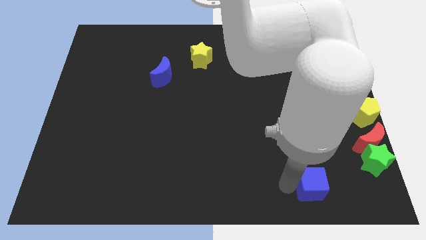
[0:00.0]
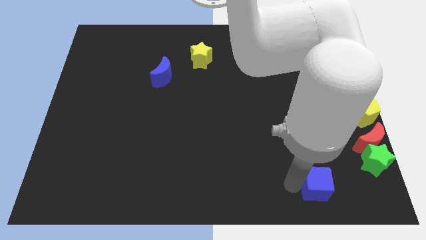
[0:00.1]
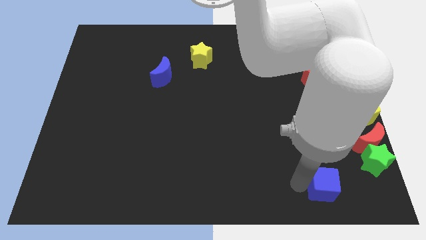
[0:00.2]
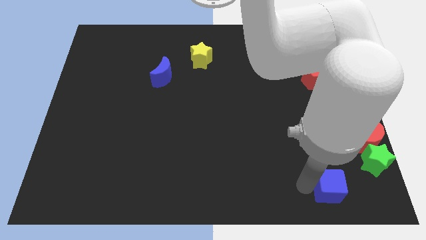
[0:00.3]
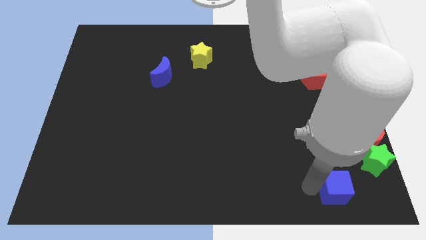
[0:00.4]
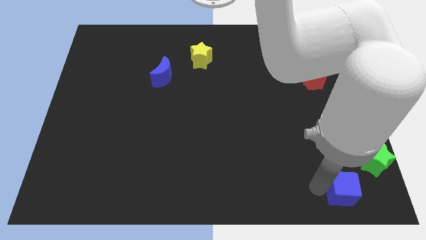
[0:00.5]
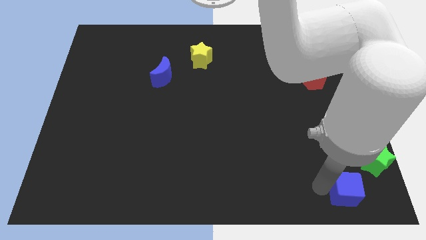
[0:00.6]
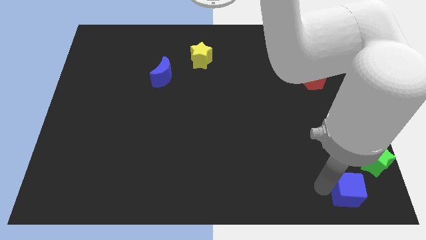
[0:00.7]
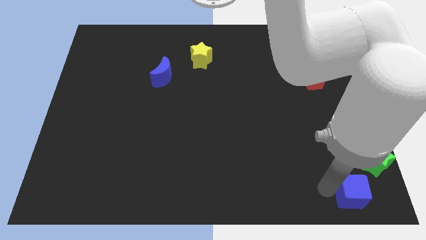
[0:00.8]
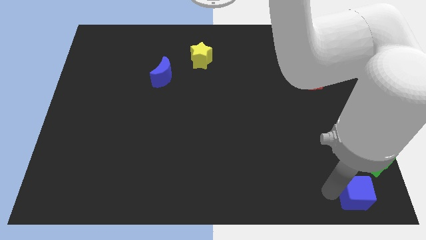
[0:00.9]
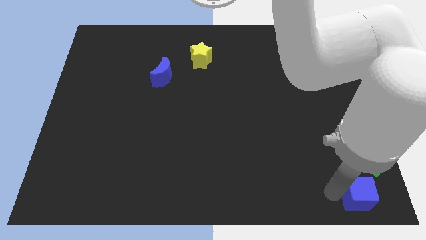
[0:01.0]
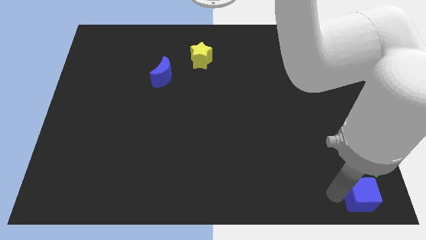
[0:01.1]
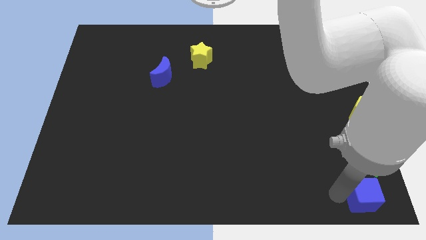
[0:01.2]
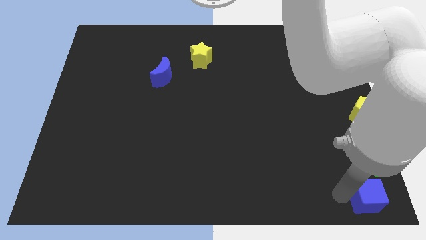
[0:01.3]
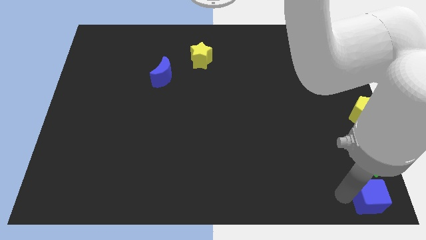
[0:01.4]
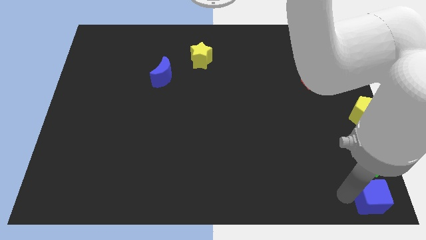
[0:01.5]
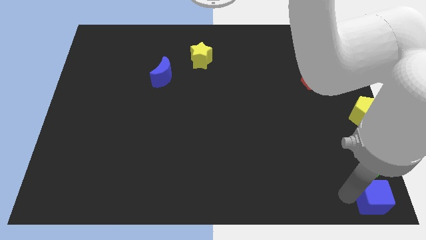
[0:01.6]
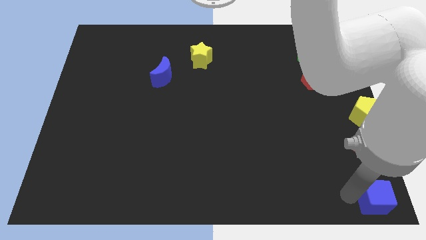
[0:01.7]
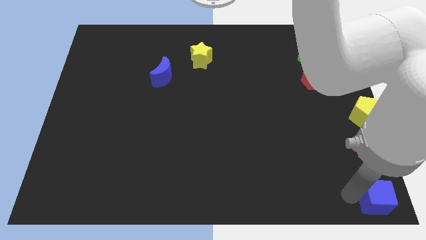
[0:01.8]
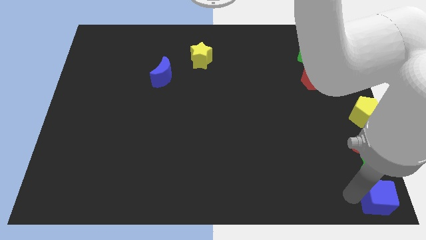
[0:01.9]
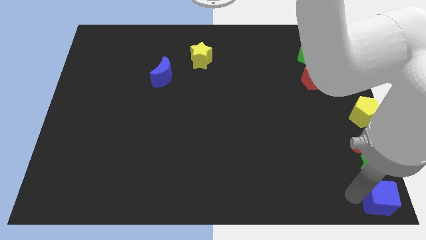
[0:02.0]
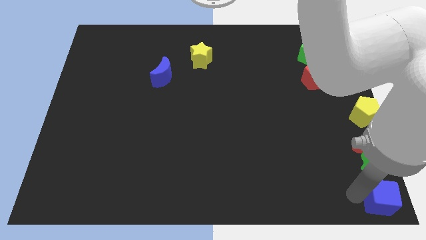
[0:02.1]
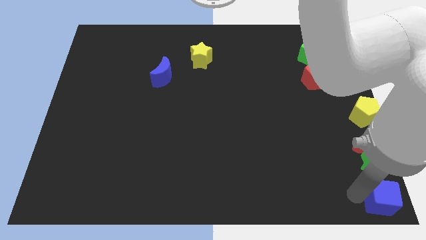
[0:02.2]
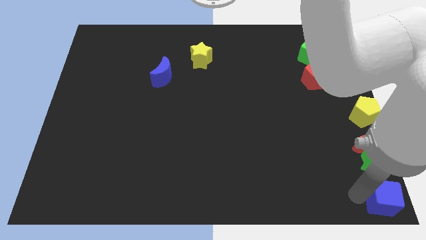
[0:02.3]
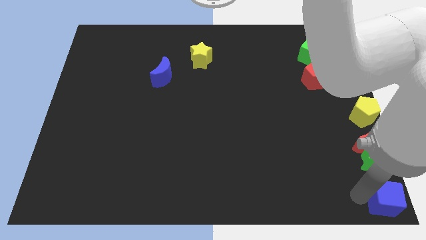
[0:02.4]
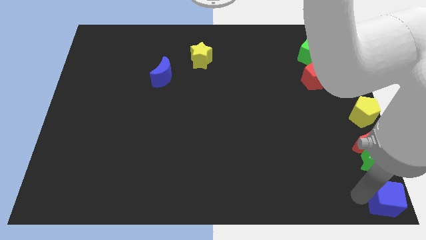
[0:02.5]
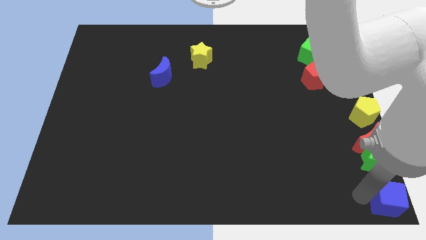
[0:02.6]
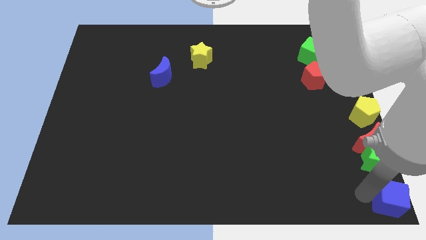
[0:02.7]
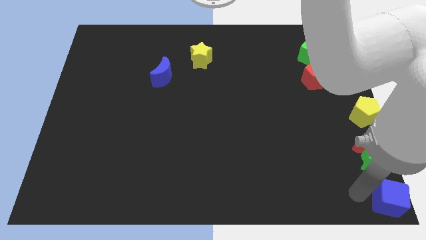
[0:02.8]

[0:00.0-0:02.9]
place the blue cube to the bottom right of the board

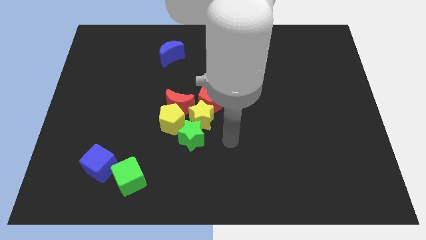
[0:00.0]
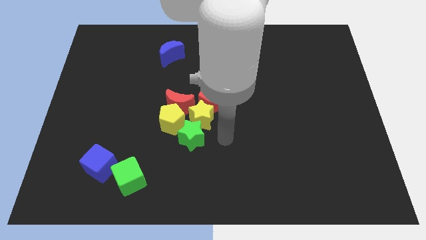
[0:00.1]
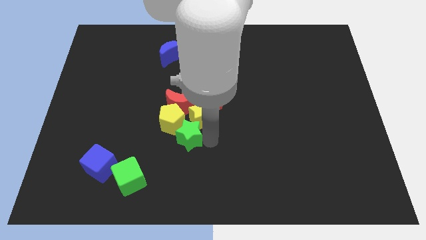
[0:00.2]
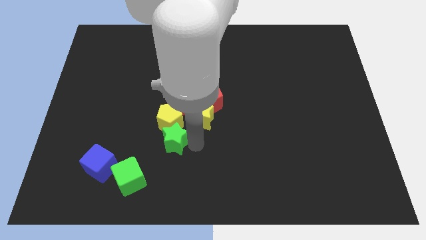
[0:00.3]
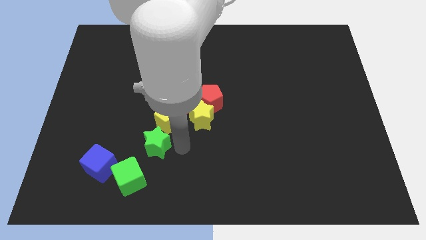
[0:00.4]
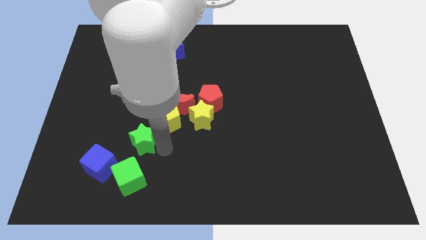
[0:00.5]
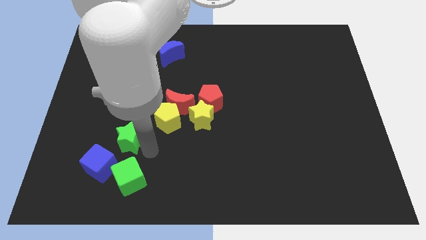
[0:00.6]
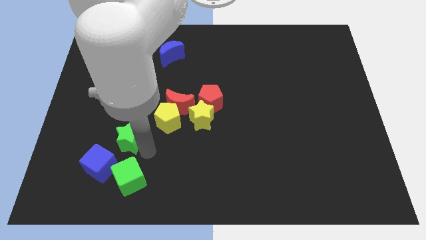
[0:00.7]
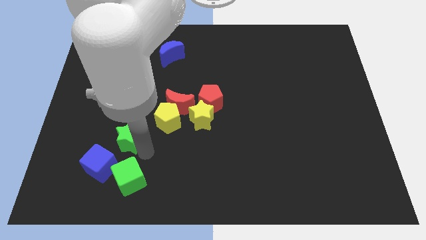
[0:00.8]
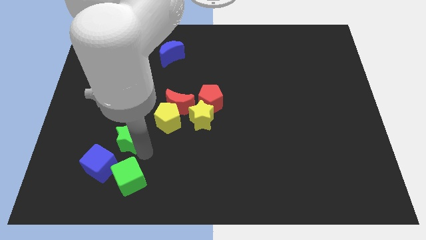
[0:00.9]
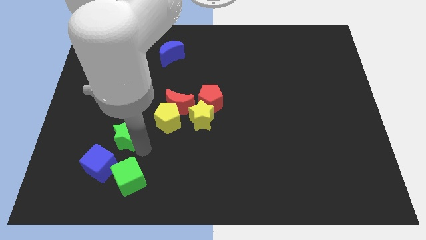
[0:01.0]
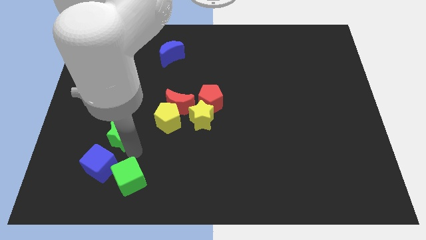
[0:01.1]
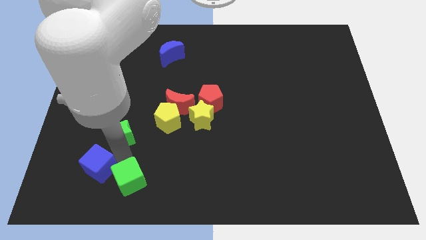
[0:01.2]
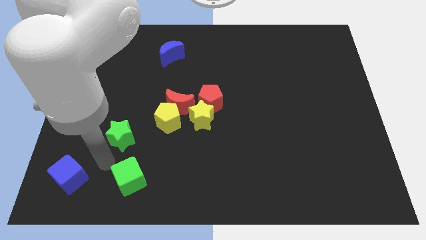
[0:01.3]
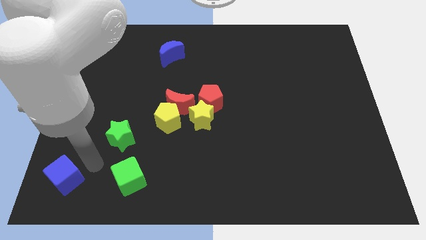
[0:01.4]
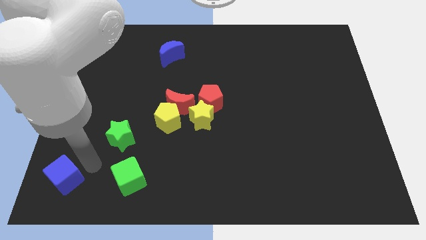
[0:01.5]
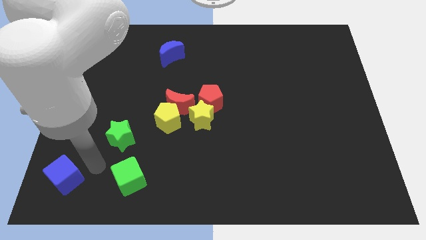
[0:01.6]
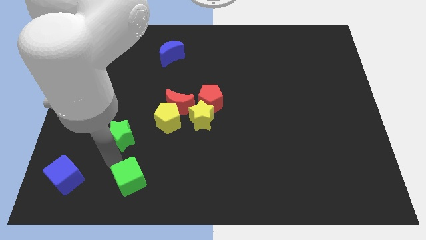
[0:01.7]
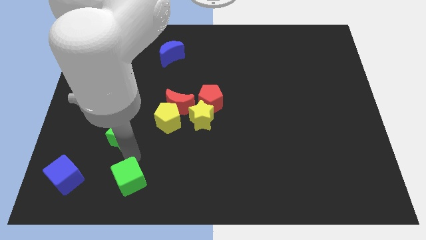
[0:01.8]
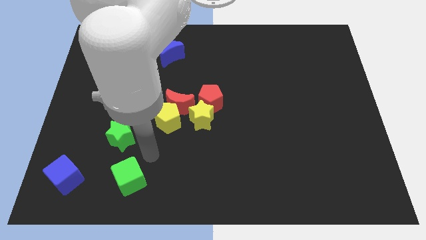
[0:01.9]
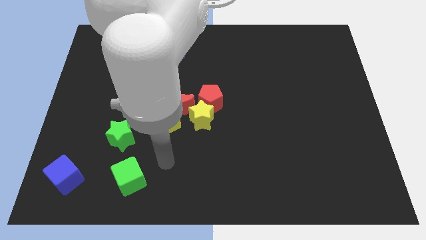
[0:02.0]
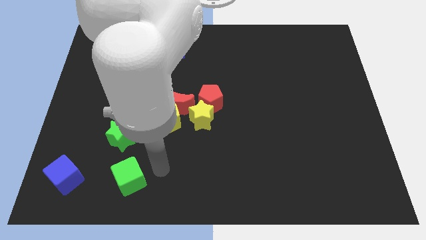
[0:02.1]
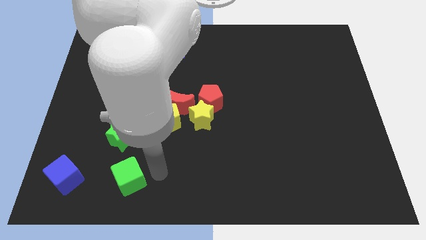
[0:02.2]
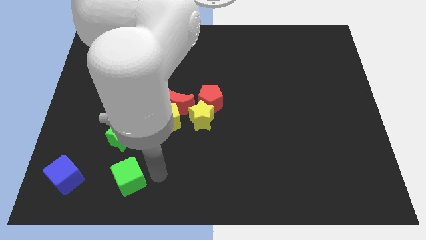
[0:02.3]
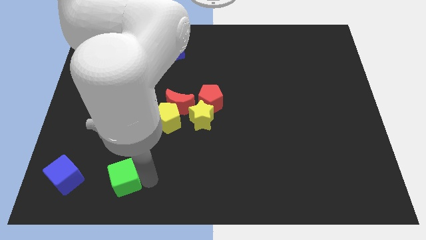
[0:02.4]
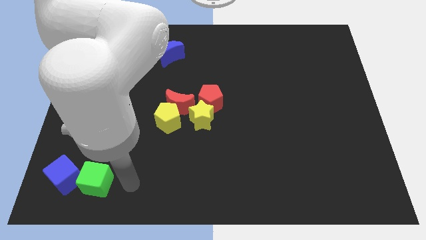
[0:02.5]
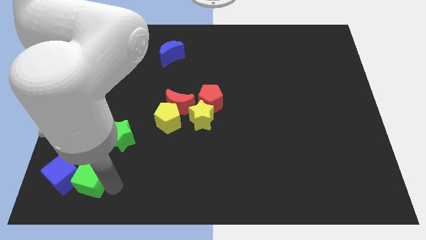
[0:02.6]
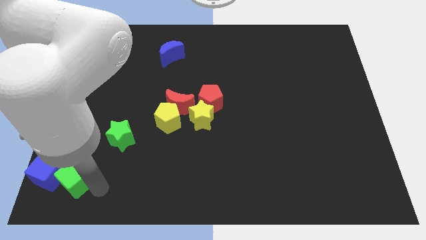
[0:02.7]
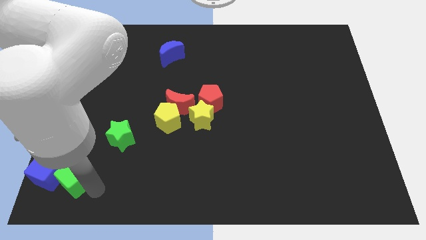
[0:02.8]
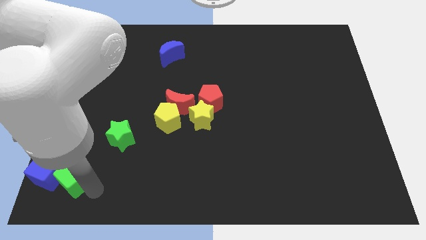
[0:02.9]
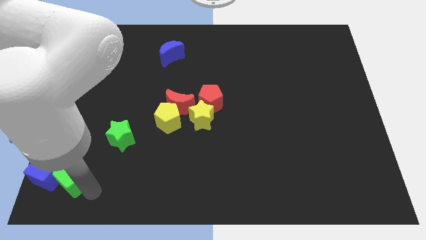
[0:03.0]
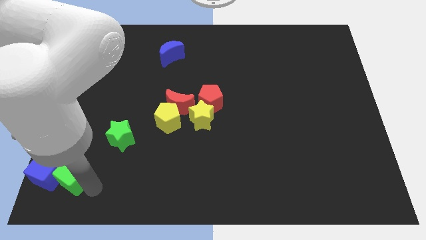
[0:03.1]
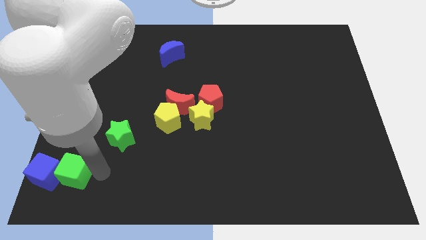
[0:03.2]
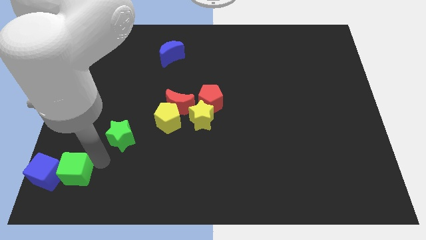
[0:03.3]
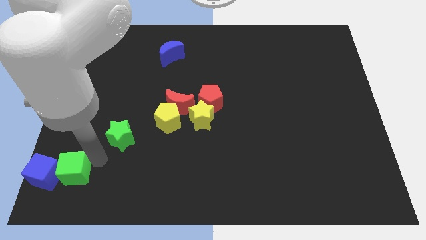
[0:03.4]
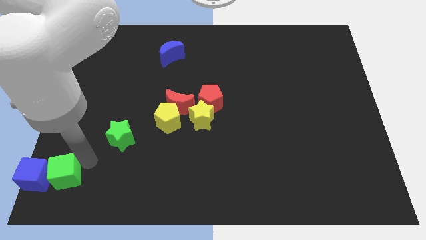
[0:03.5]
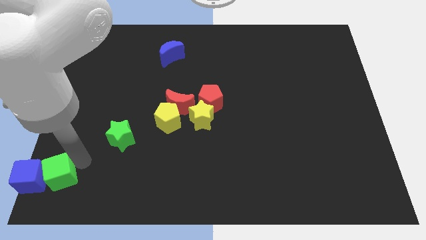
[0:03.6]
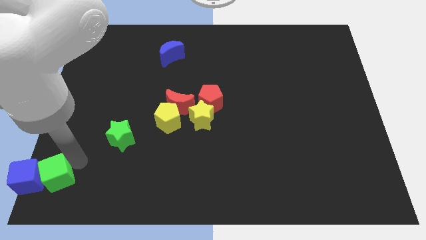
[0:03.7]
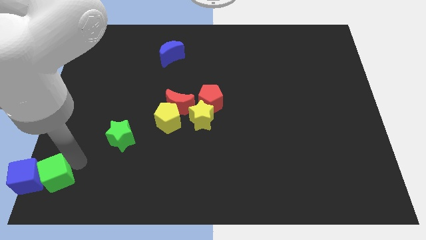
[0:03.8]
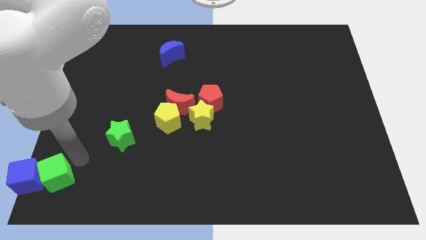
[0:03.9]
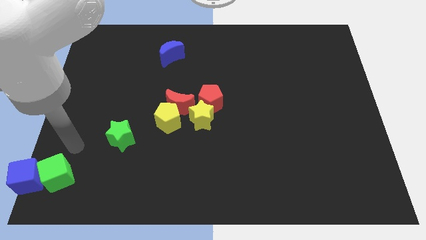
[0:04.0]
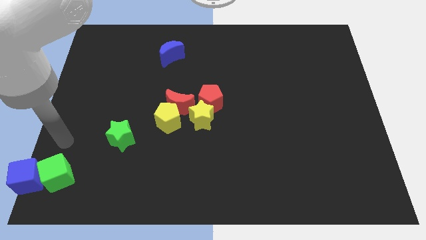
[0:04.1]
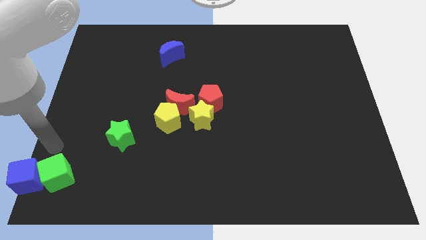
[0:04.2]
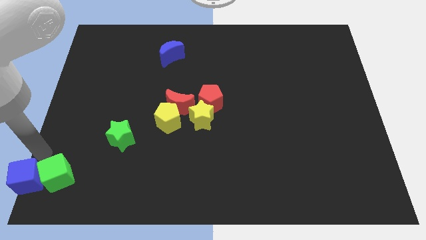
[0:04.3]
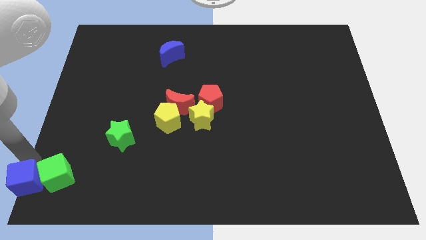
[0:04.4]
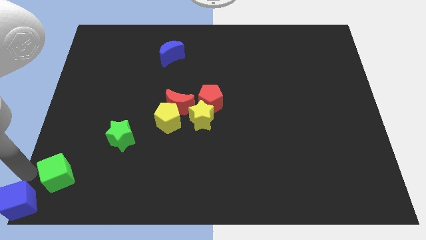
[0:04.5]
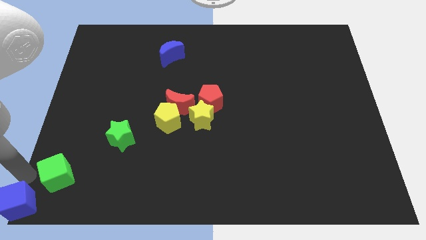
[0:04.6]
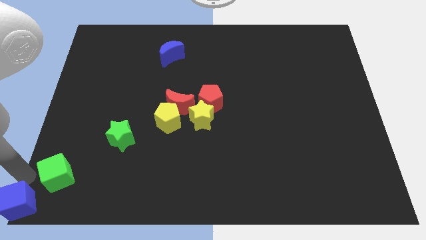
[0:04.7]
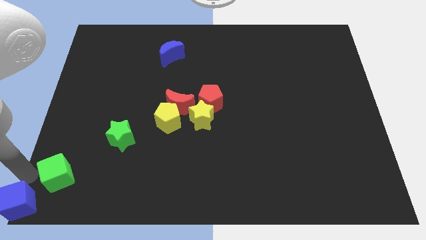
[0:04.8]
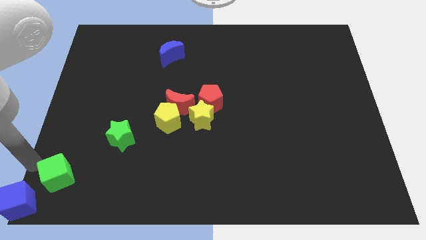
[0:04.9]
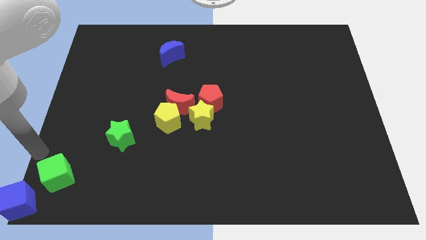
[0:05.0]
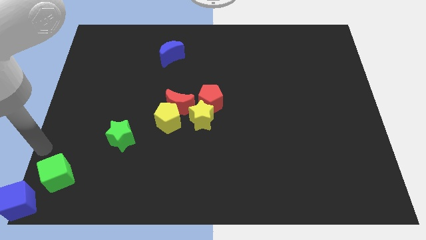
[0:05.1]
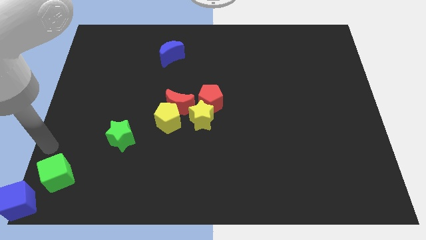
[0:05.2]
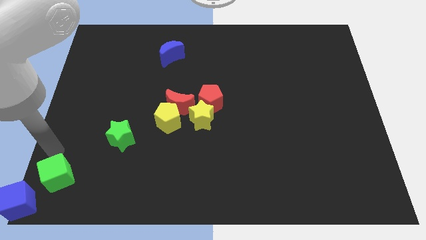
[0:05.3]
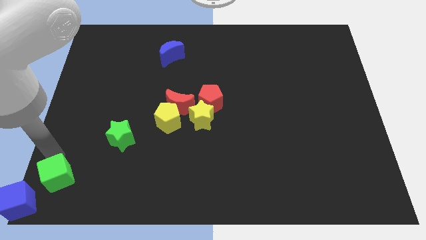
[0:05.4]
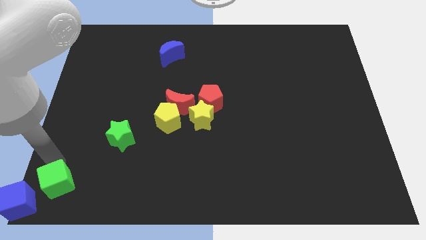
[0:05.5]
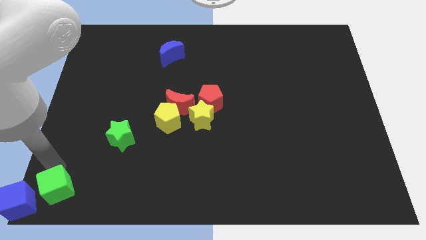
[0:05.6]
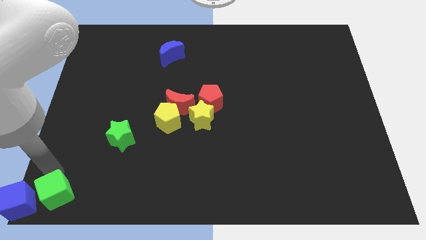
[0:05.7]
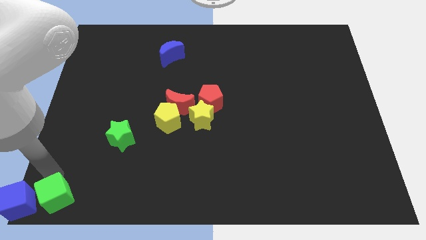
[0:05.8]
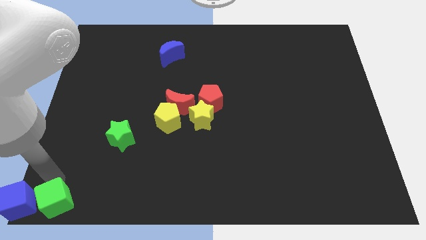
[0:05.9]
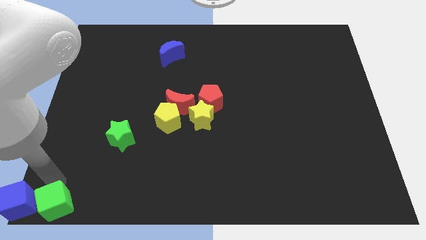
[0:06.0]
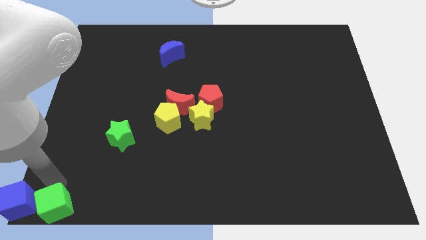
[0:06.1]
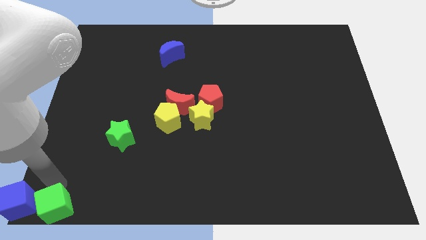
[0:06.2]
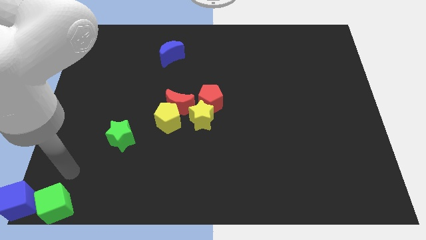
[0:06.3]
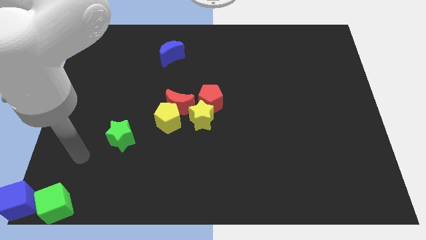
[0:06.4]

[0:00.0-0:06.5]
place the blue cube and green cube at the bottom left corner of the board
